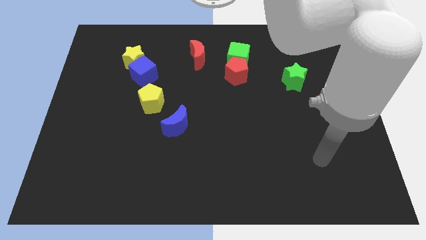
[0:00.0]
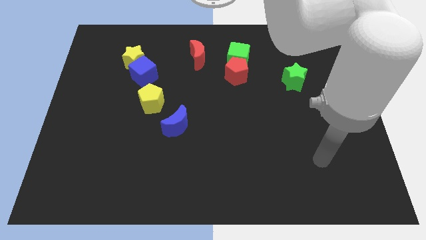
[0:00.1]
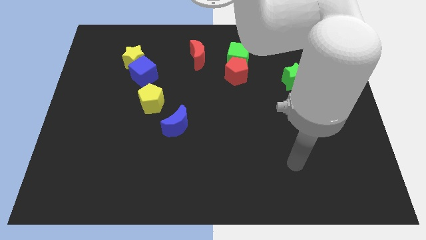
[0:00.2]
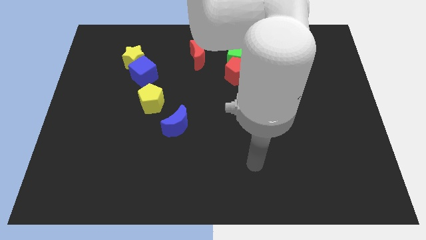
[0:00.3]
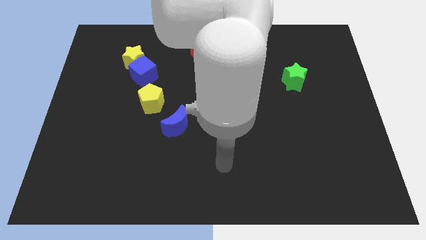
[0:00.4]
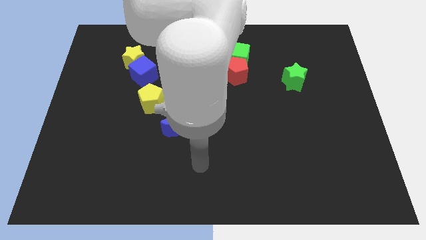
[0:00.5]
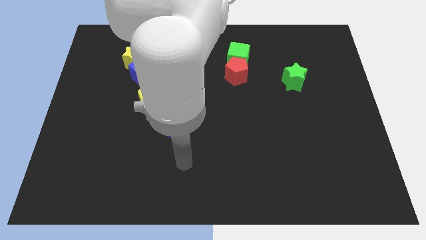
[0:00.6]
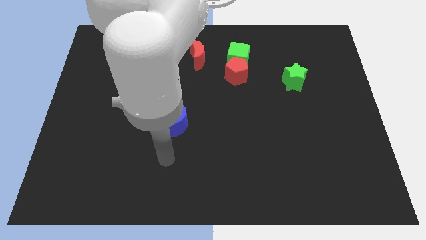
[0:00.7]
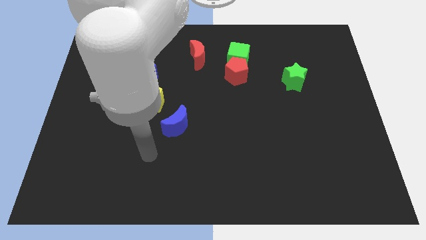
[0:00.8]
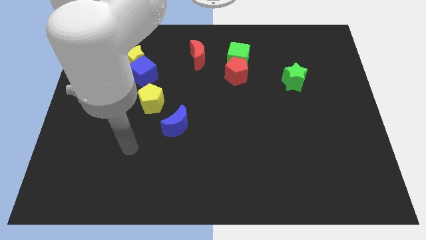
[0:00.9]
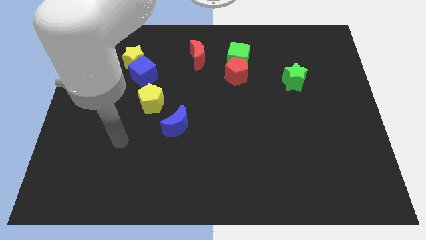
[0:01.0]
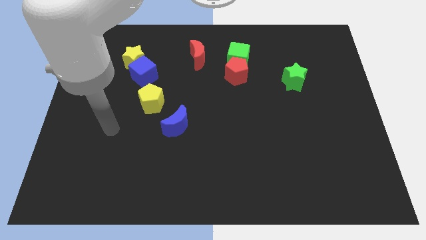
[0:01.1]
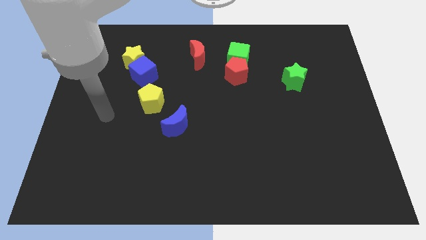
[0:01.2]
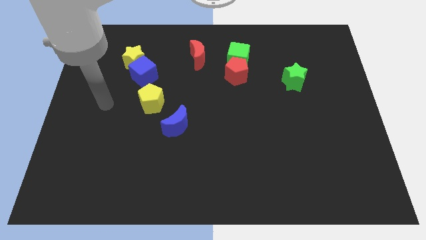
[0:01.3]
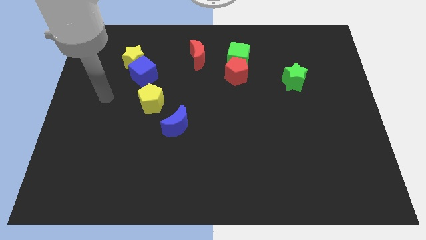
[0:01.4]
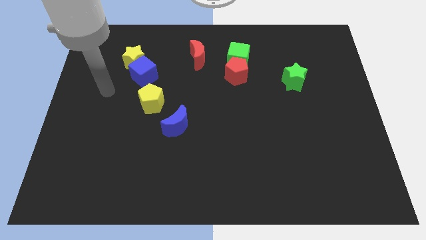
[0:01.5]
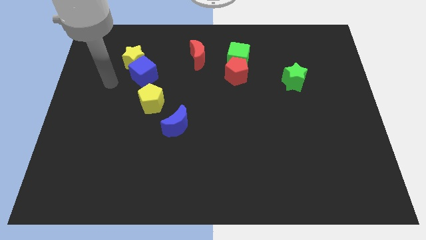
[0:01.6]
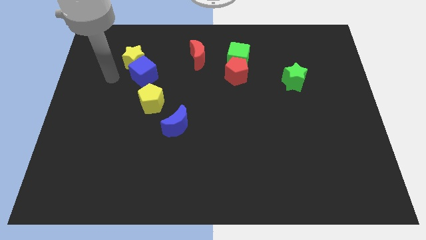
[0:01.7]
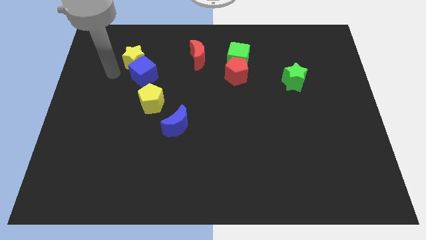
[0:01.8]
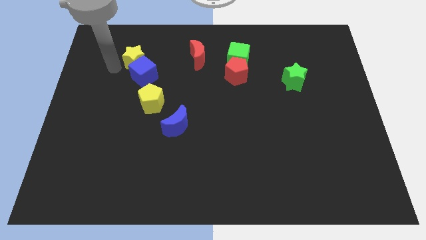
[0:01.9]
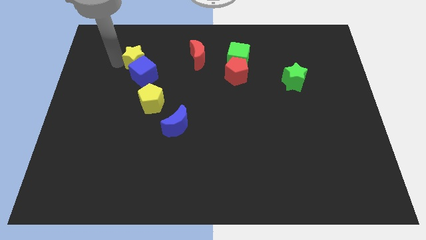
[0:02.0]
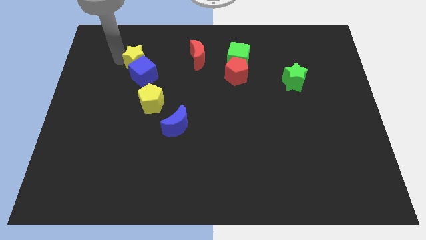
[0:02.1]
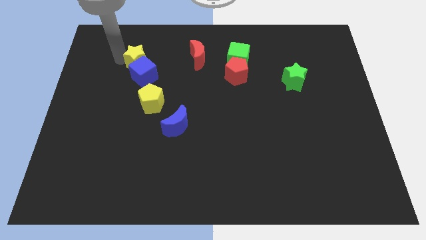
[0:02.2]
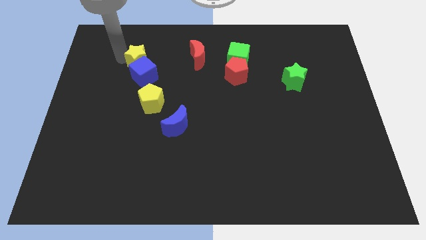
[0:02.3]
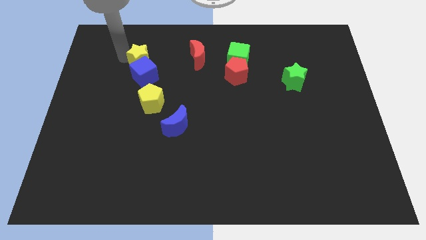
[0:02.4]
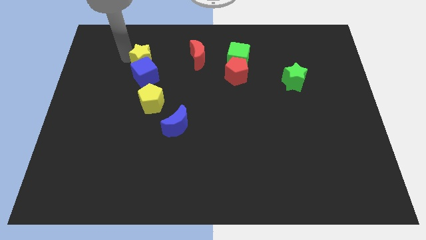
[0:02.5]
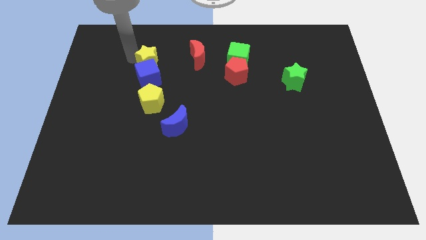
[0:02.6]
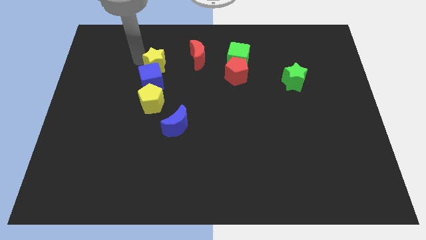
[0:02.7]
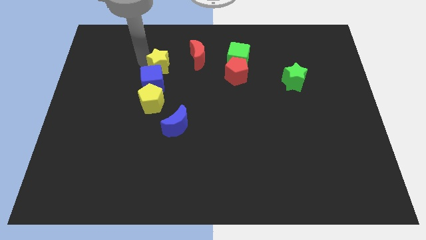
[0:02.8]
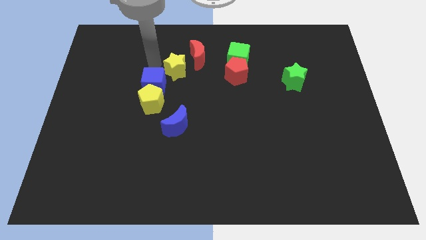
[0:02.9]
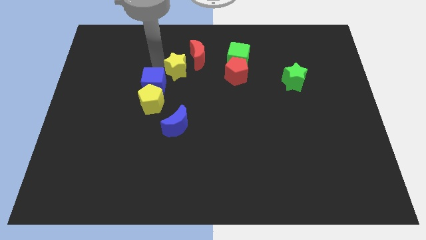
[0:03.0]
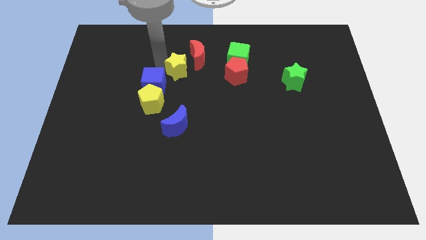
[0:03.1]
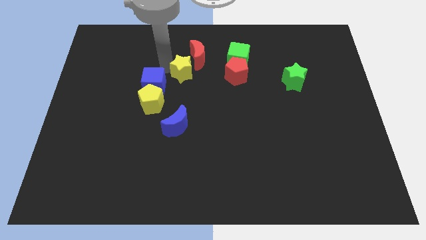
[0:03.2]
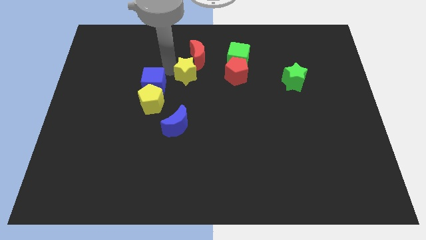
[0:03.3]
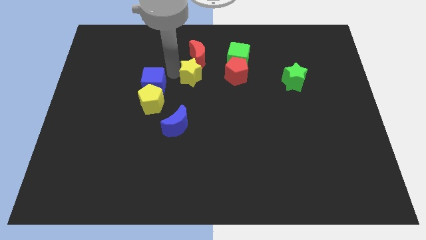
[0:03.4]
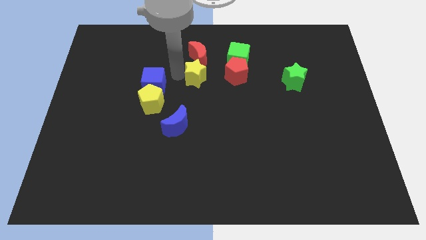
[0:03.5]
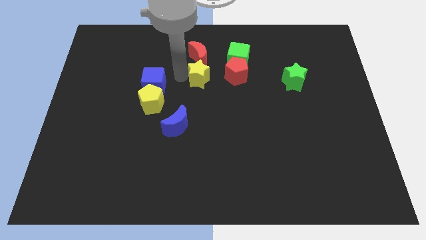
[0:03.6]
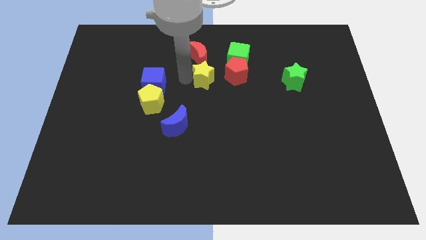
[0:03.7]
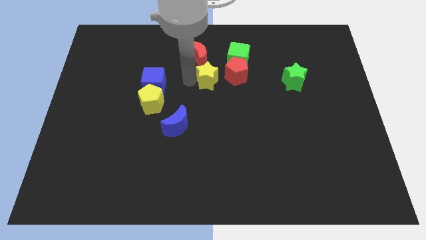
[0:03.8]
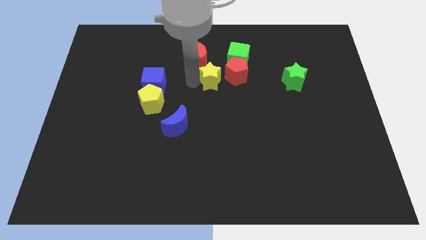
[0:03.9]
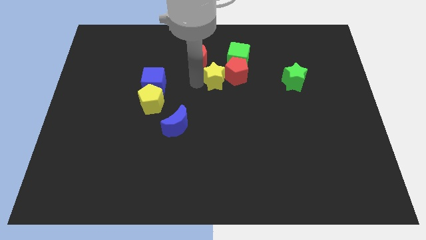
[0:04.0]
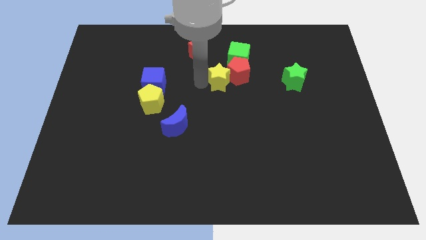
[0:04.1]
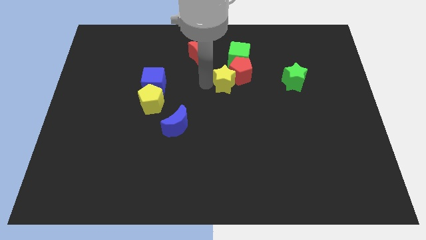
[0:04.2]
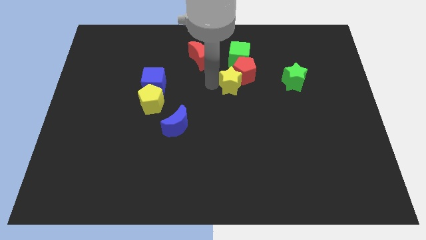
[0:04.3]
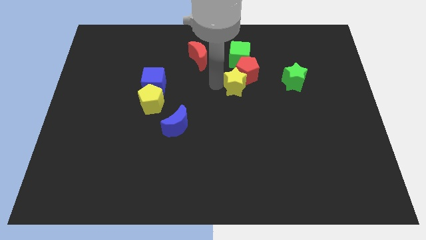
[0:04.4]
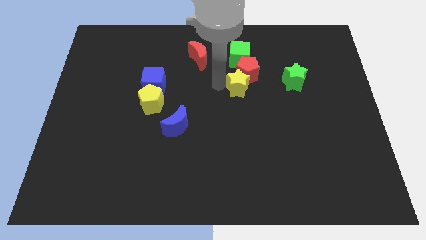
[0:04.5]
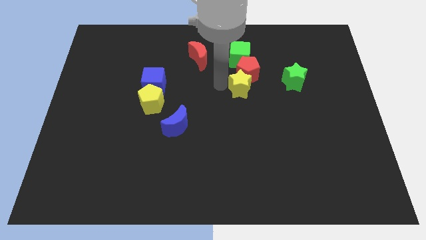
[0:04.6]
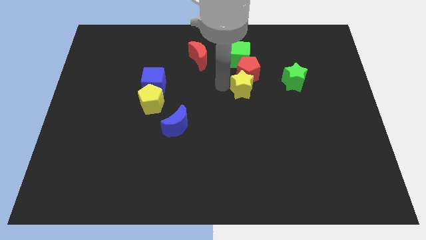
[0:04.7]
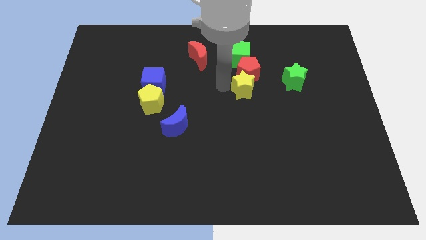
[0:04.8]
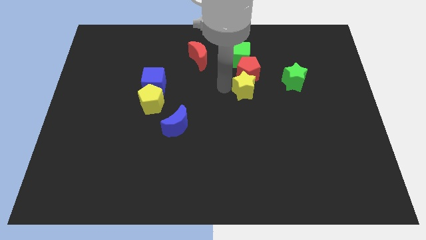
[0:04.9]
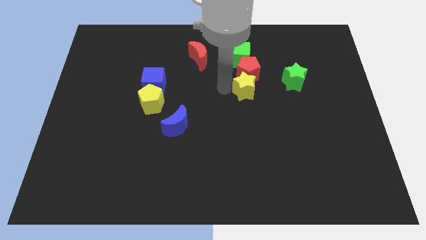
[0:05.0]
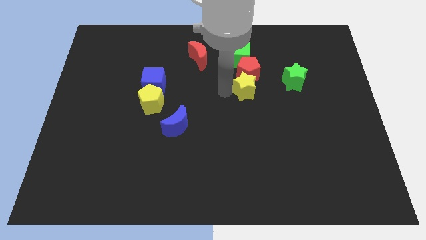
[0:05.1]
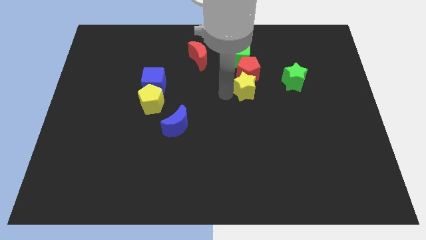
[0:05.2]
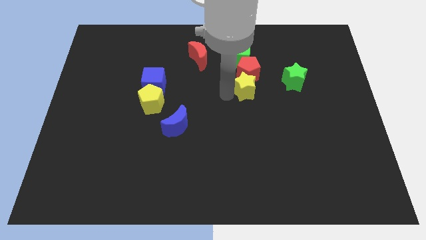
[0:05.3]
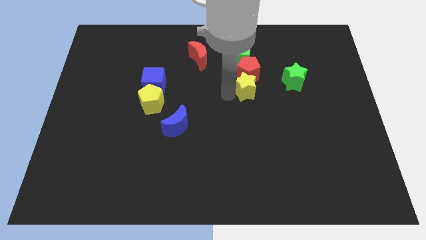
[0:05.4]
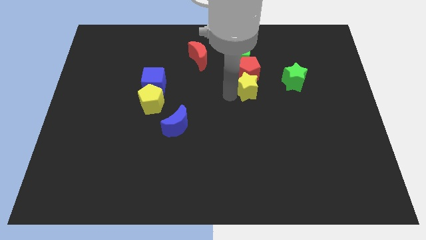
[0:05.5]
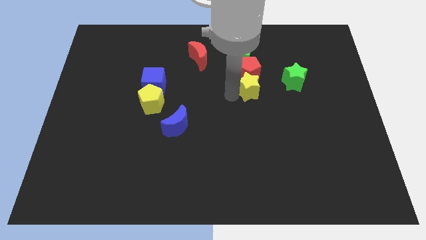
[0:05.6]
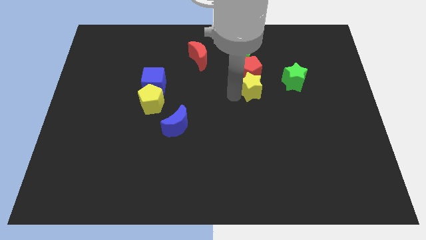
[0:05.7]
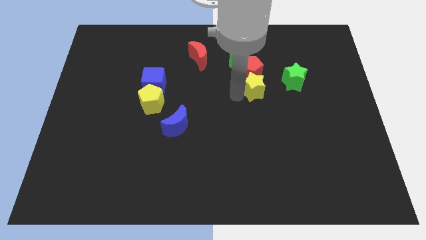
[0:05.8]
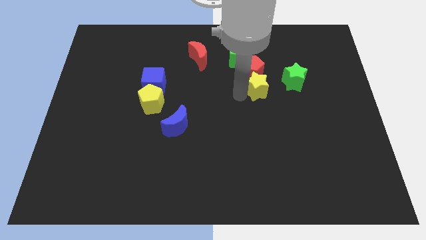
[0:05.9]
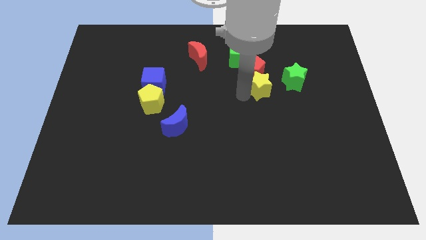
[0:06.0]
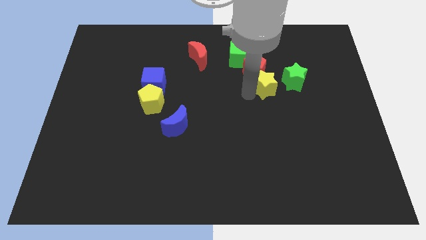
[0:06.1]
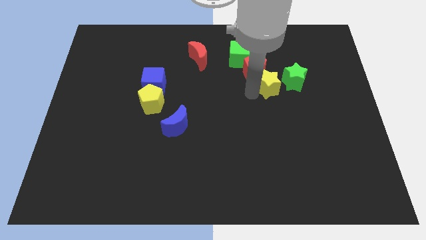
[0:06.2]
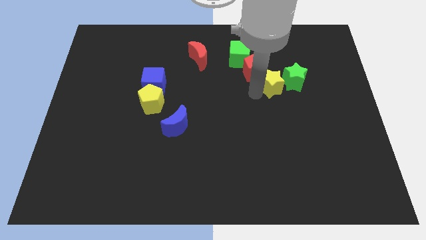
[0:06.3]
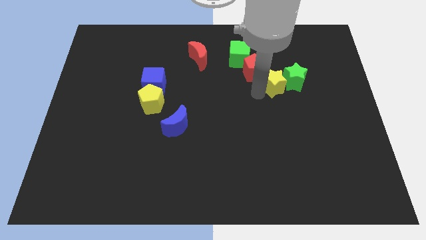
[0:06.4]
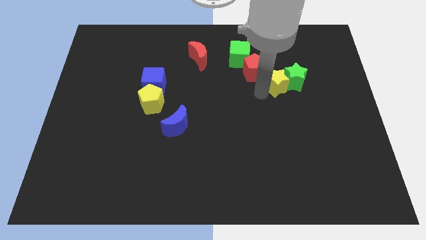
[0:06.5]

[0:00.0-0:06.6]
push the yellow star next to the green star

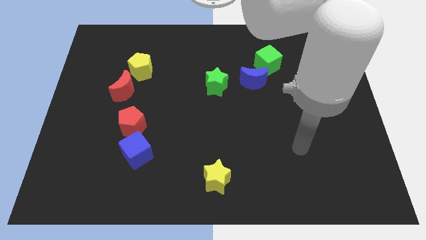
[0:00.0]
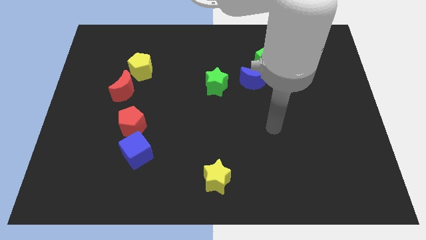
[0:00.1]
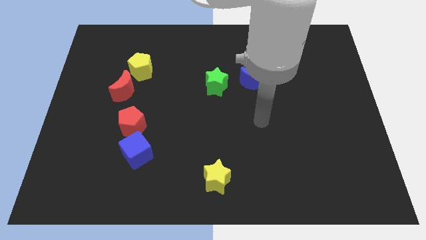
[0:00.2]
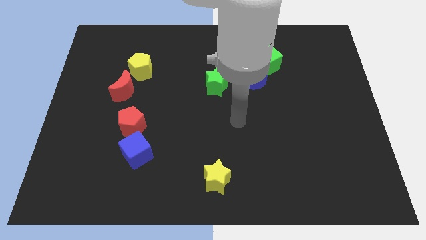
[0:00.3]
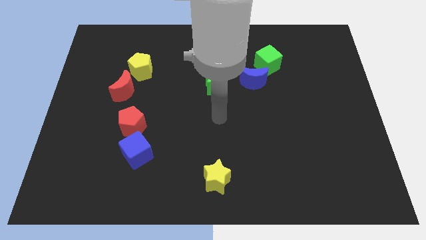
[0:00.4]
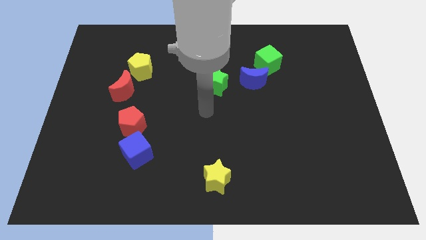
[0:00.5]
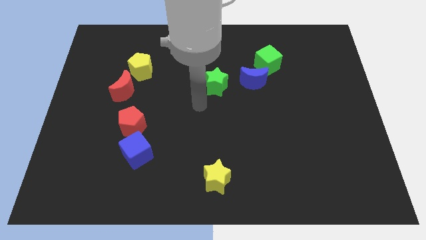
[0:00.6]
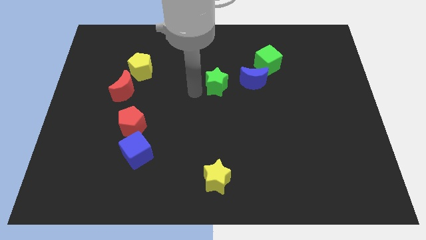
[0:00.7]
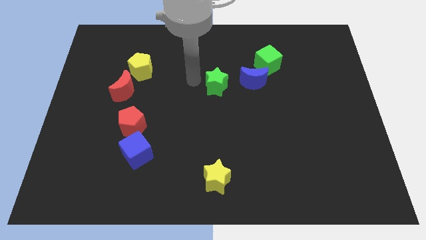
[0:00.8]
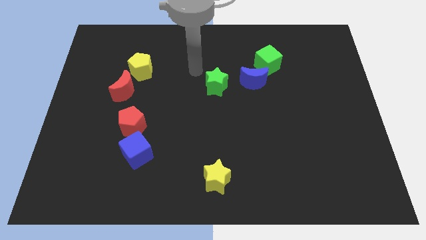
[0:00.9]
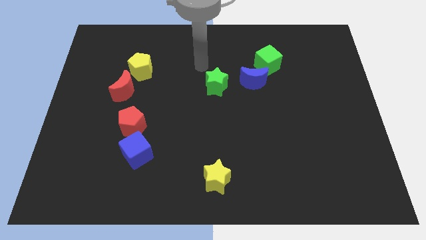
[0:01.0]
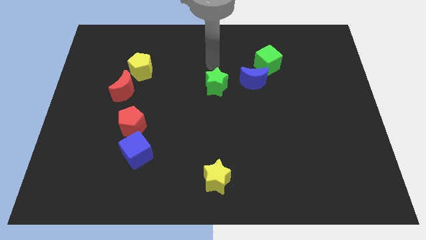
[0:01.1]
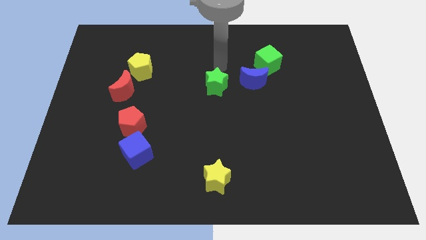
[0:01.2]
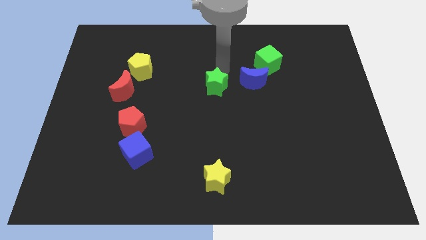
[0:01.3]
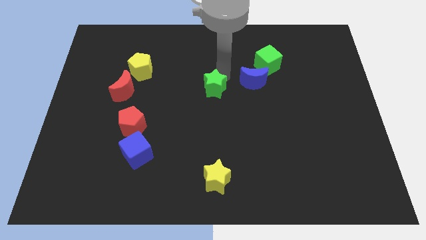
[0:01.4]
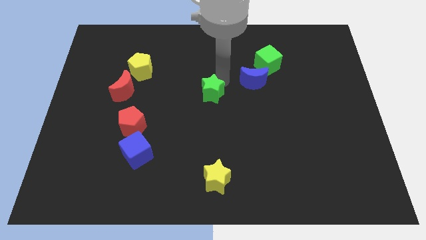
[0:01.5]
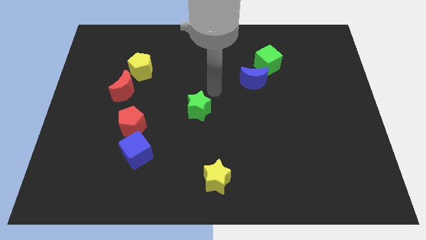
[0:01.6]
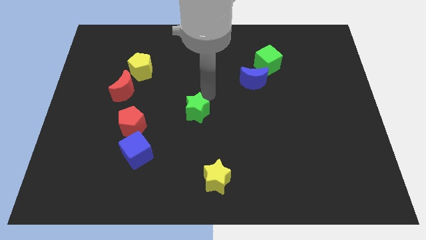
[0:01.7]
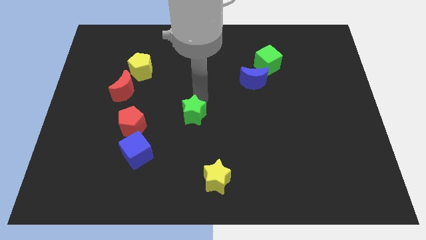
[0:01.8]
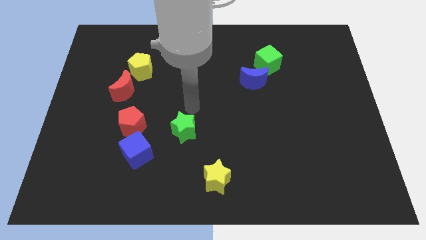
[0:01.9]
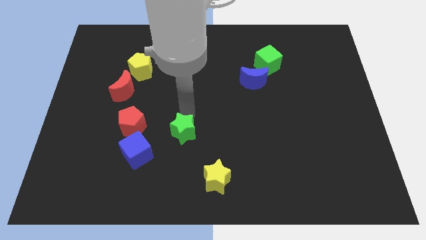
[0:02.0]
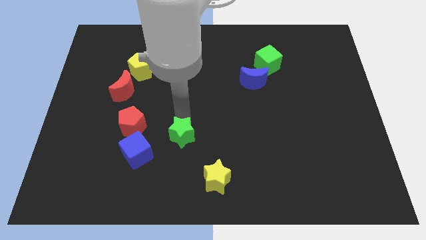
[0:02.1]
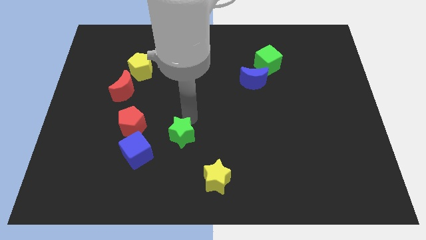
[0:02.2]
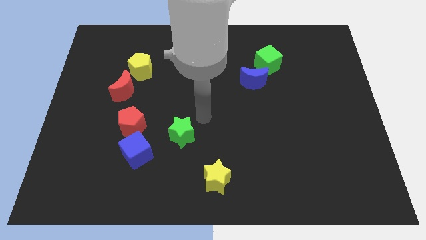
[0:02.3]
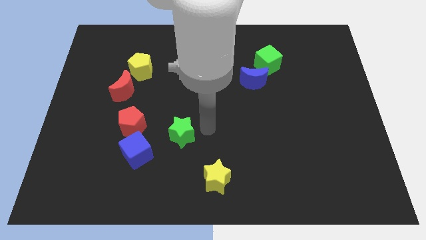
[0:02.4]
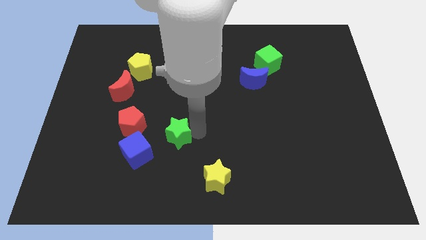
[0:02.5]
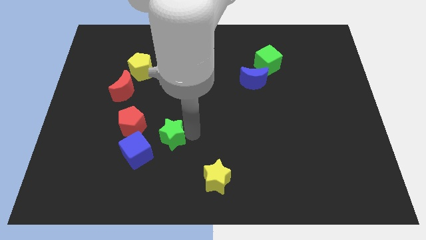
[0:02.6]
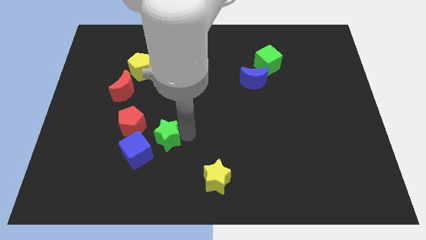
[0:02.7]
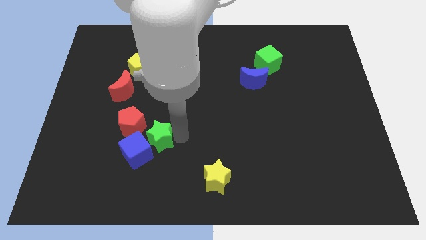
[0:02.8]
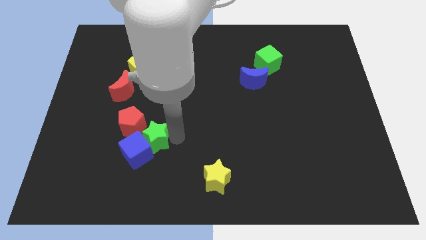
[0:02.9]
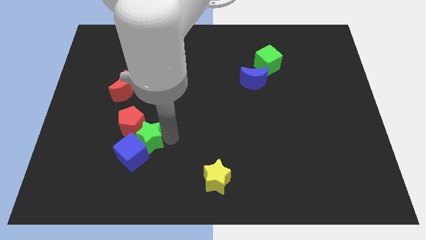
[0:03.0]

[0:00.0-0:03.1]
put the green star close to the blue cube
